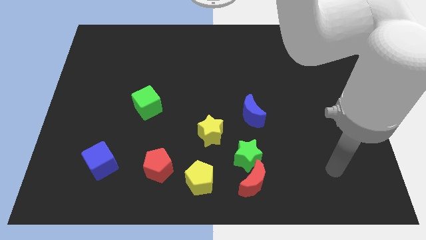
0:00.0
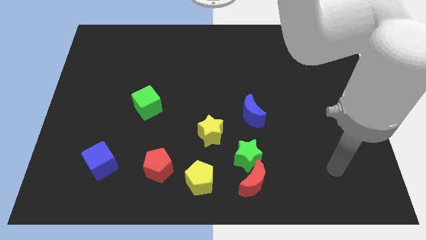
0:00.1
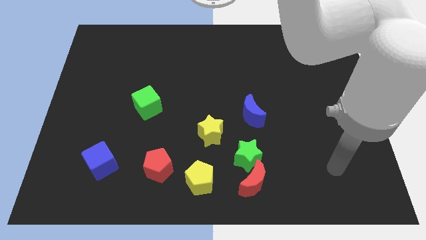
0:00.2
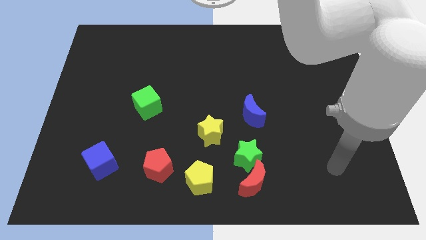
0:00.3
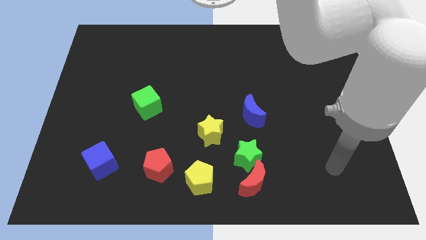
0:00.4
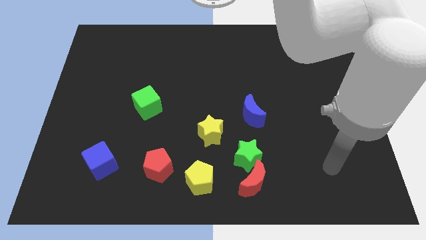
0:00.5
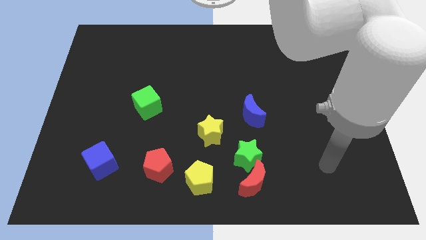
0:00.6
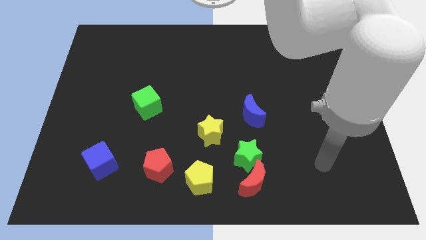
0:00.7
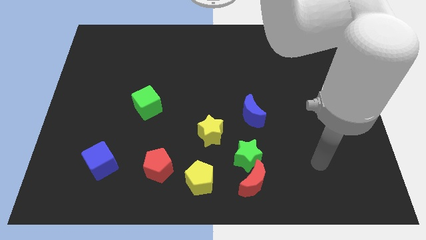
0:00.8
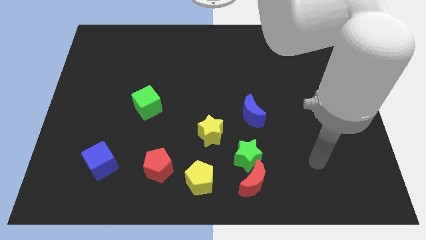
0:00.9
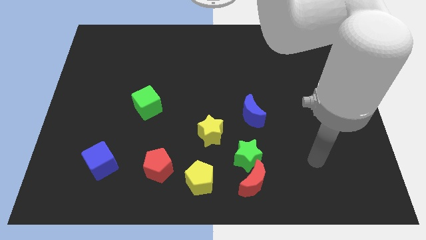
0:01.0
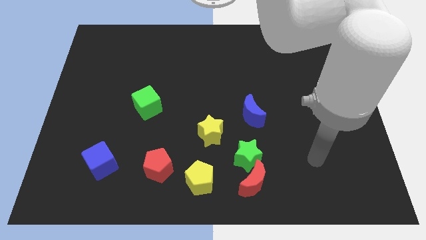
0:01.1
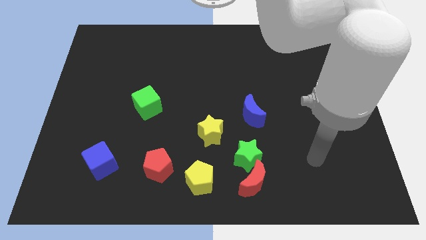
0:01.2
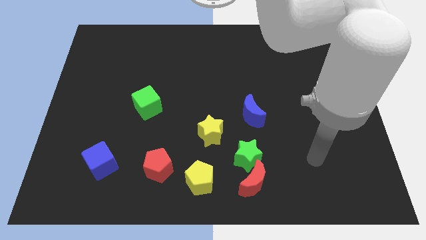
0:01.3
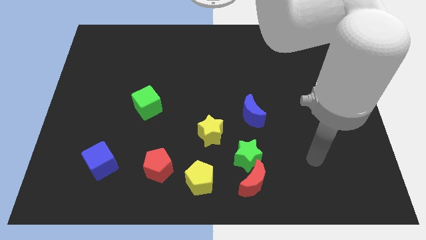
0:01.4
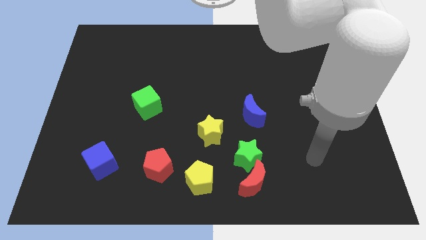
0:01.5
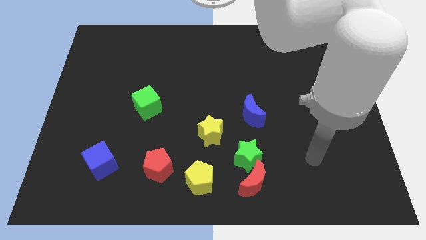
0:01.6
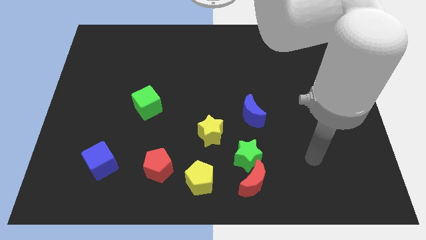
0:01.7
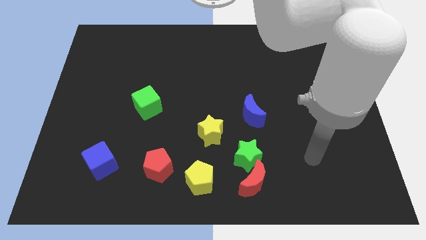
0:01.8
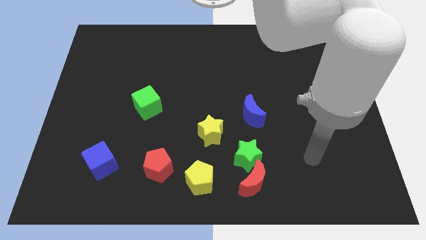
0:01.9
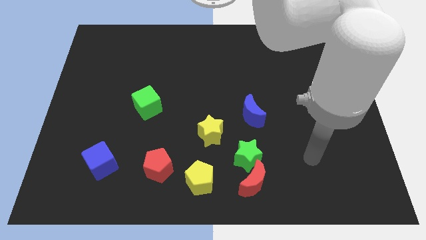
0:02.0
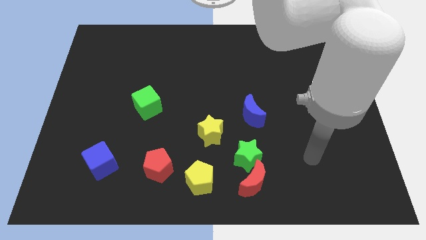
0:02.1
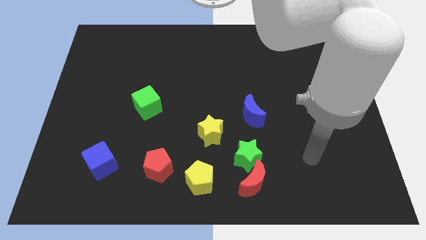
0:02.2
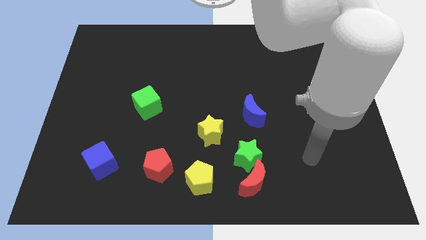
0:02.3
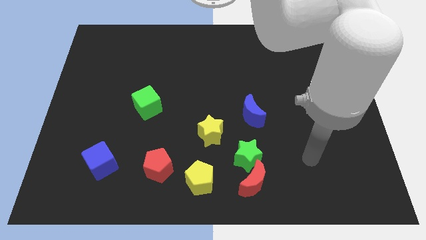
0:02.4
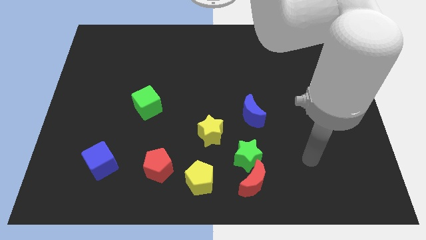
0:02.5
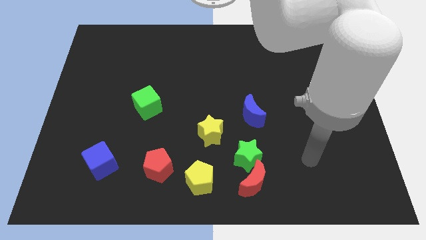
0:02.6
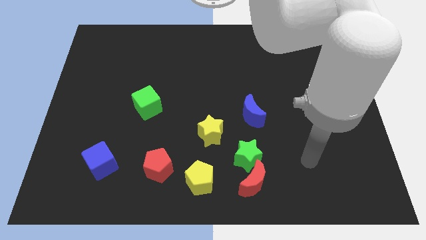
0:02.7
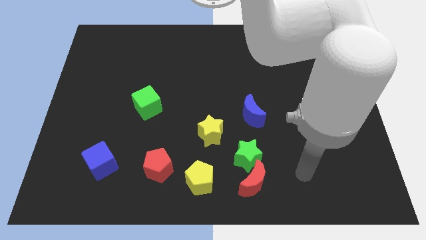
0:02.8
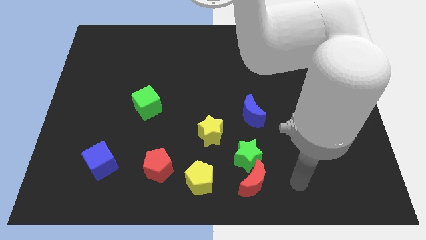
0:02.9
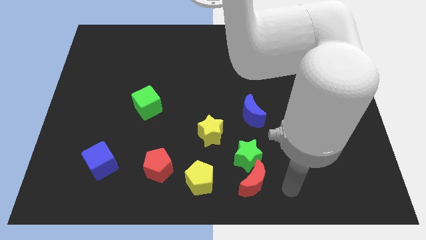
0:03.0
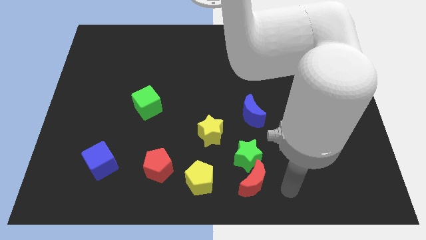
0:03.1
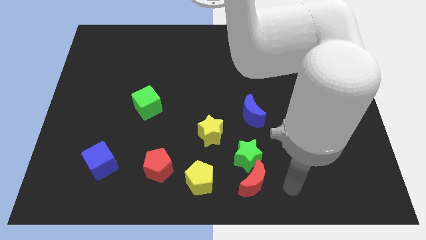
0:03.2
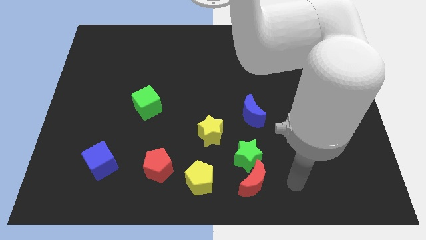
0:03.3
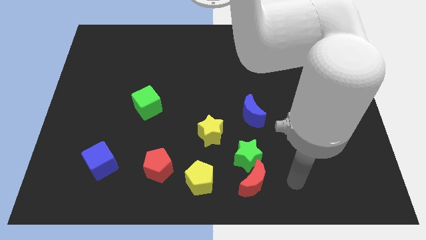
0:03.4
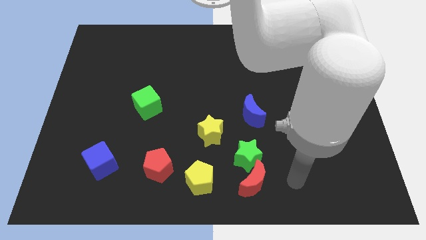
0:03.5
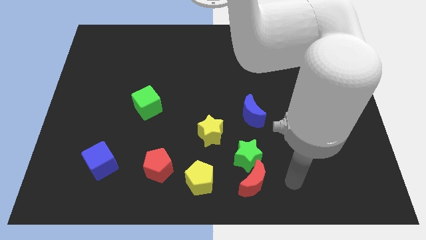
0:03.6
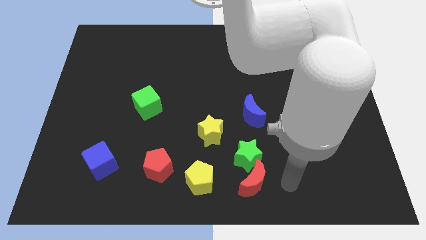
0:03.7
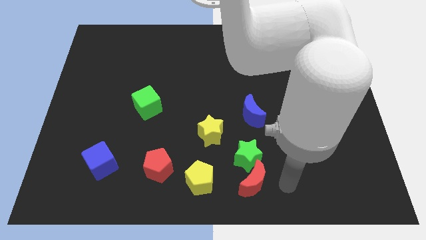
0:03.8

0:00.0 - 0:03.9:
place your arm to the right of the red crescent

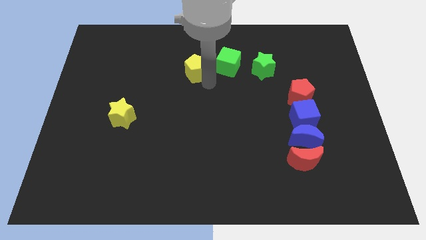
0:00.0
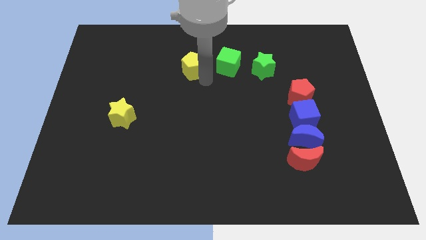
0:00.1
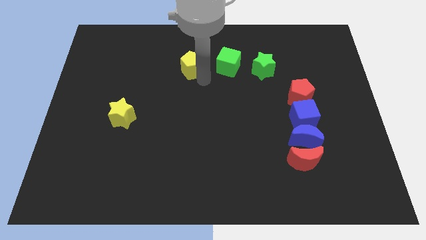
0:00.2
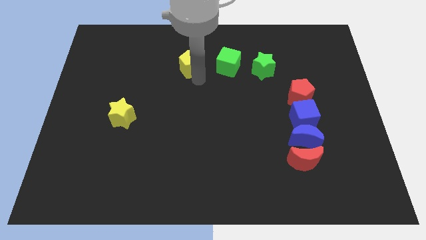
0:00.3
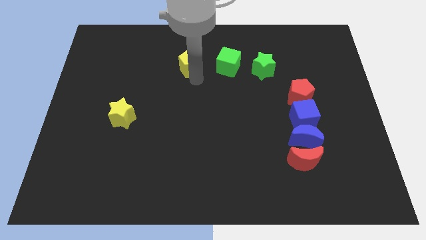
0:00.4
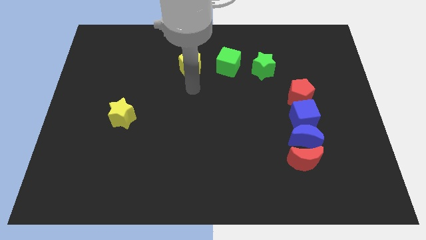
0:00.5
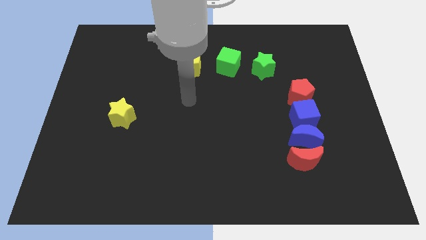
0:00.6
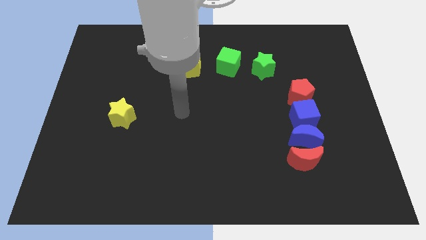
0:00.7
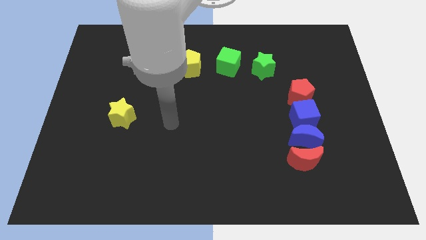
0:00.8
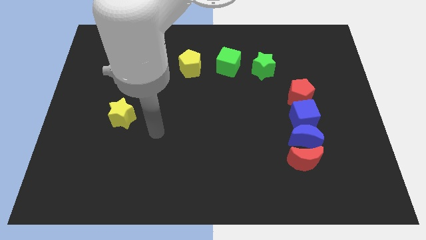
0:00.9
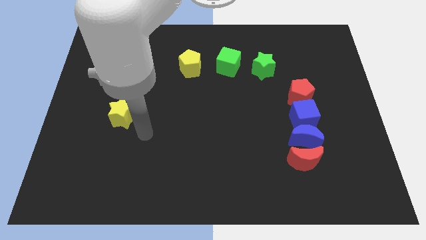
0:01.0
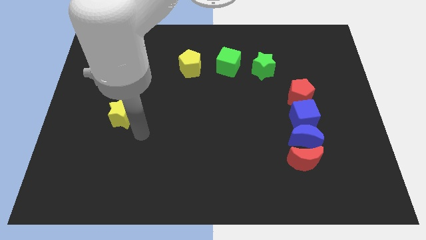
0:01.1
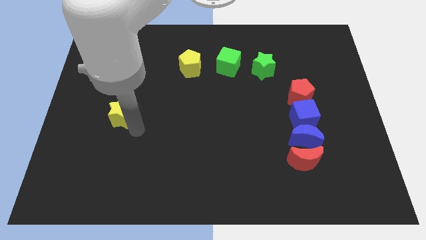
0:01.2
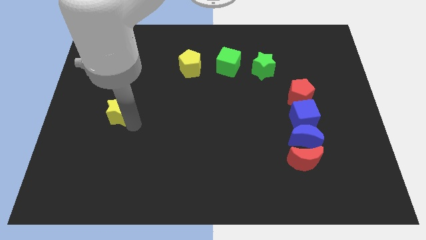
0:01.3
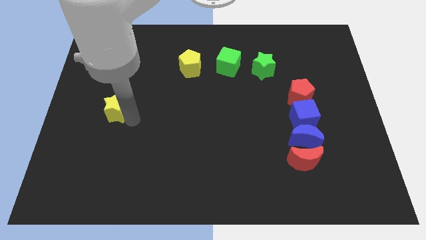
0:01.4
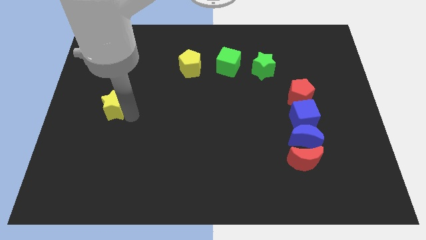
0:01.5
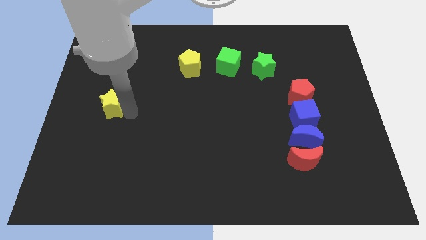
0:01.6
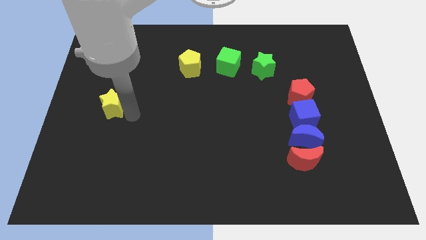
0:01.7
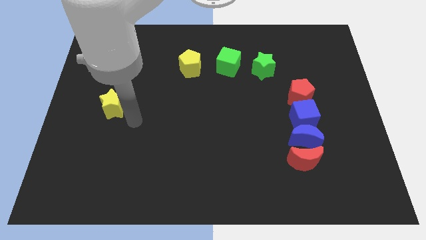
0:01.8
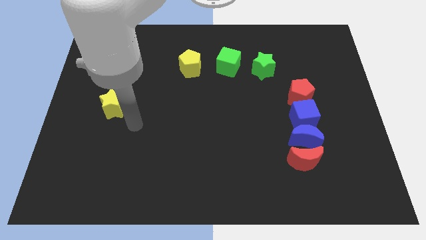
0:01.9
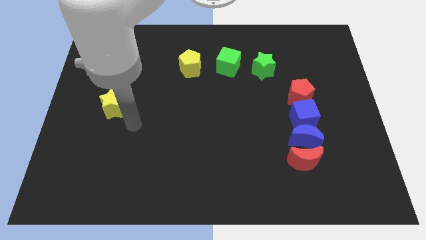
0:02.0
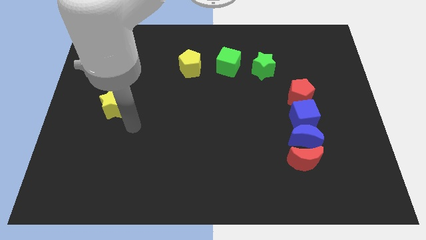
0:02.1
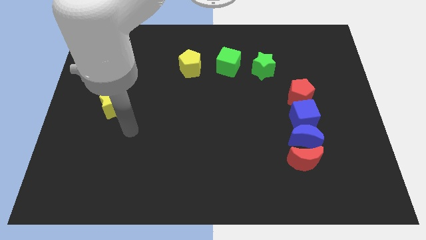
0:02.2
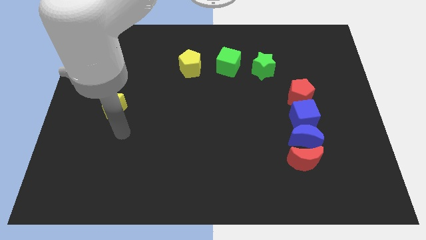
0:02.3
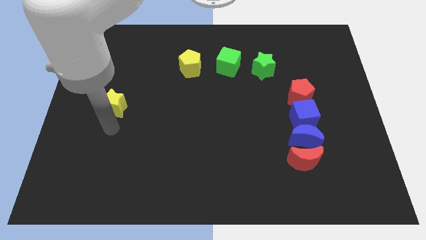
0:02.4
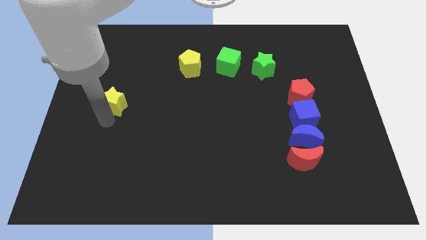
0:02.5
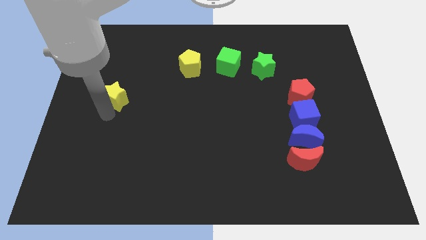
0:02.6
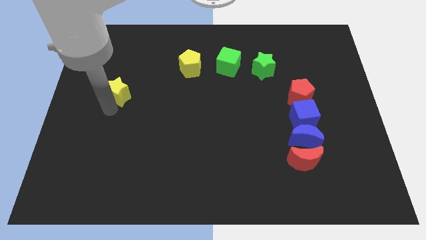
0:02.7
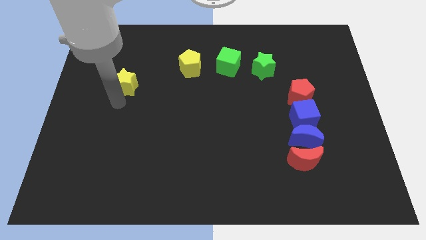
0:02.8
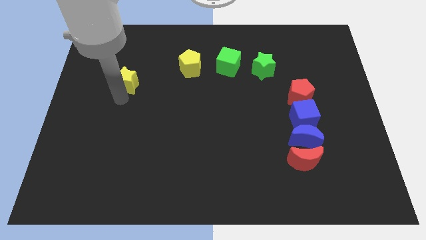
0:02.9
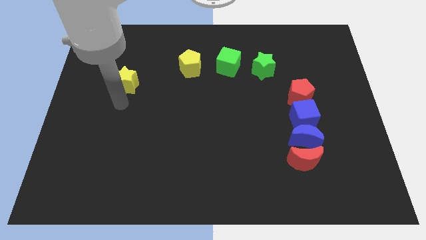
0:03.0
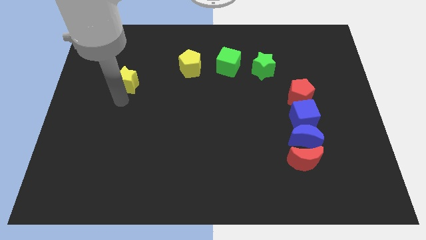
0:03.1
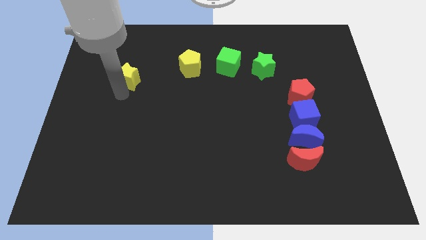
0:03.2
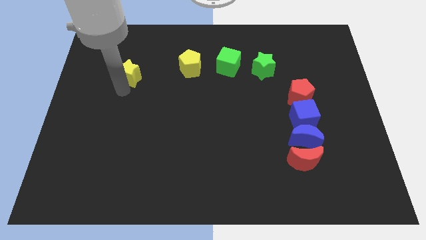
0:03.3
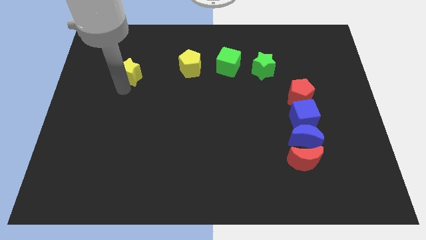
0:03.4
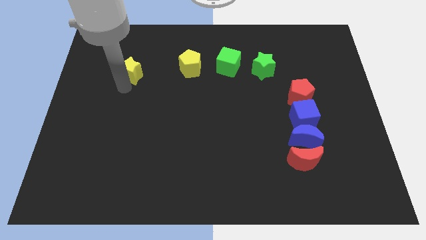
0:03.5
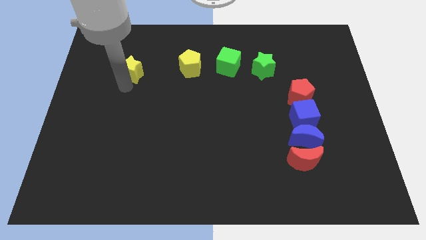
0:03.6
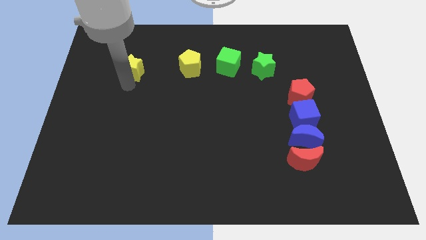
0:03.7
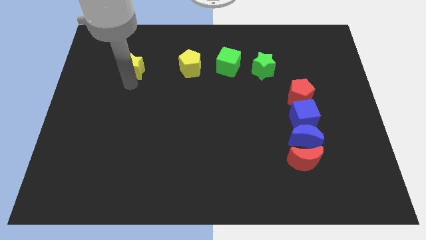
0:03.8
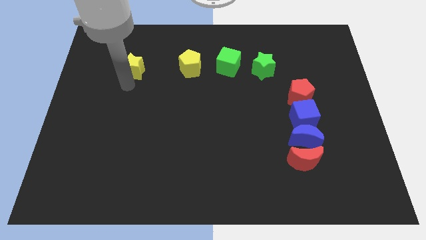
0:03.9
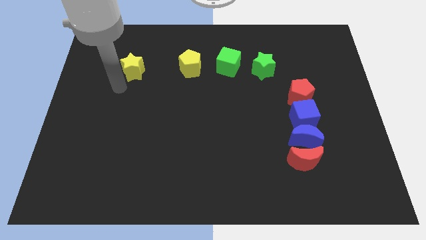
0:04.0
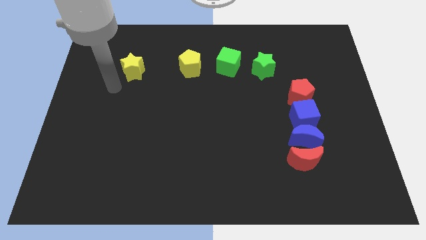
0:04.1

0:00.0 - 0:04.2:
move the yellow star left to the yellow pentagon

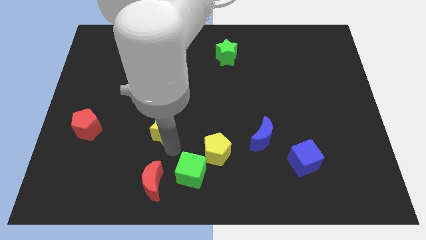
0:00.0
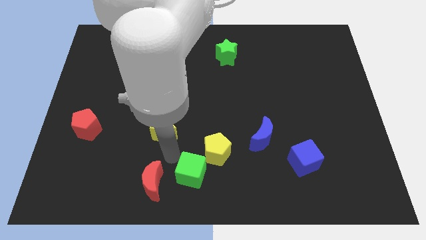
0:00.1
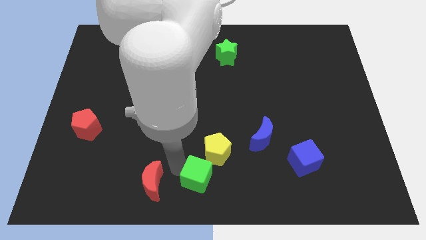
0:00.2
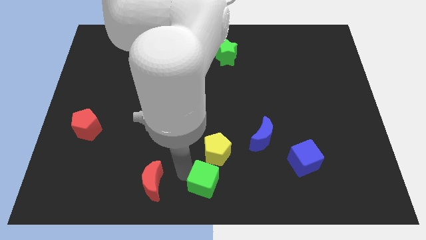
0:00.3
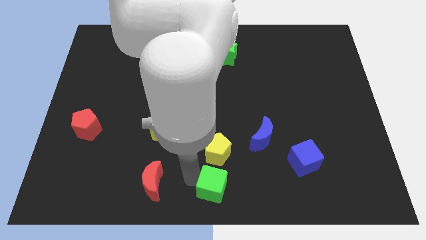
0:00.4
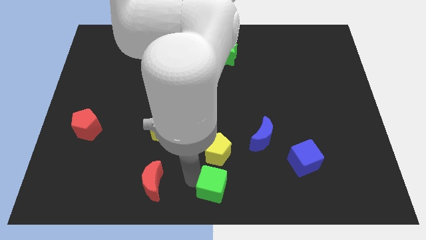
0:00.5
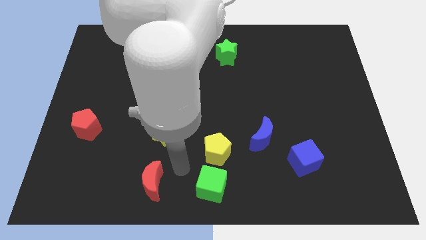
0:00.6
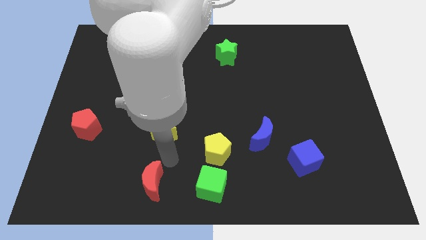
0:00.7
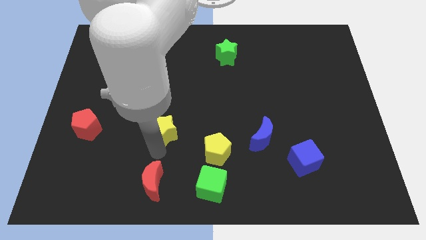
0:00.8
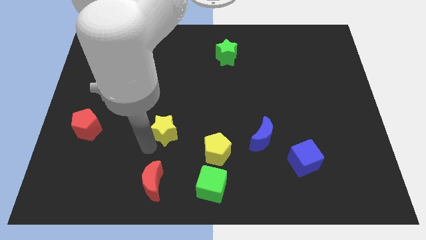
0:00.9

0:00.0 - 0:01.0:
drag the green cube parallel to red moon
